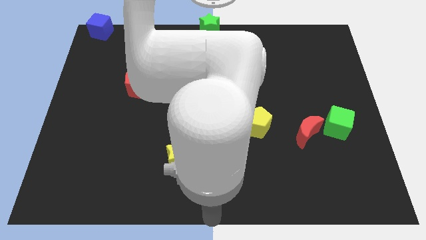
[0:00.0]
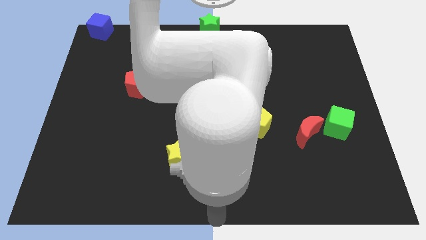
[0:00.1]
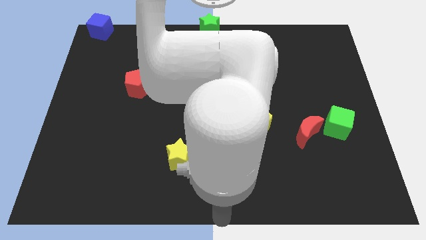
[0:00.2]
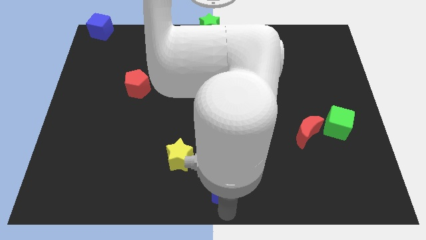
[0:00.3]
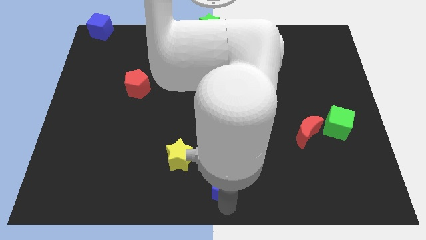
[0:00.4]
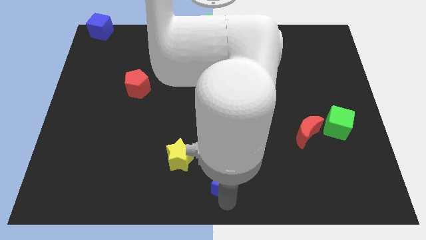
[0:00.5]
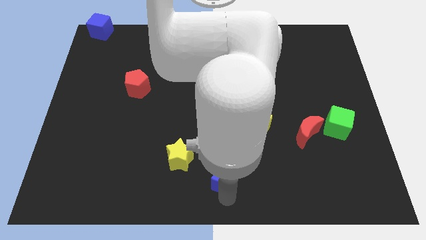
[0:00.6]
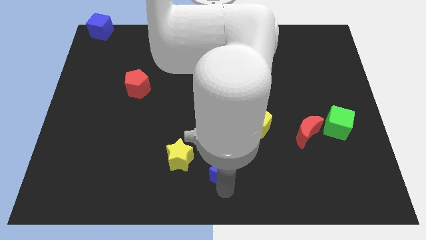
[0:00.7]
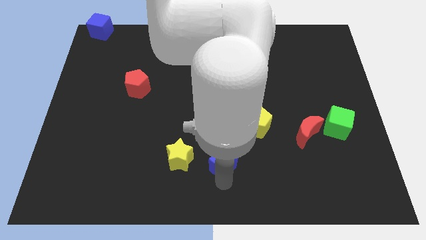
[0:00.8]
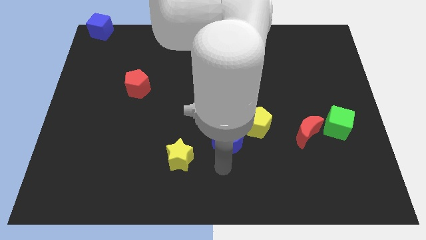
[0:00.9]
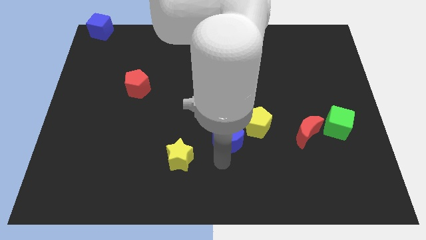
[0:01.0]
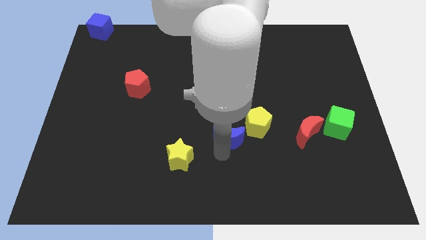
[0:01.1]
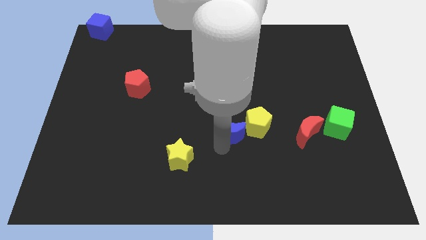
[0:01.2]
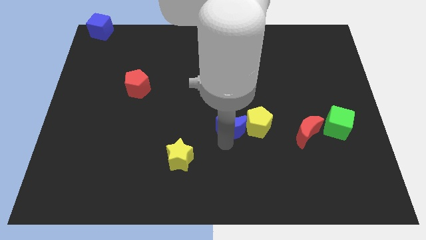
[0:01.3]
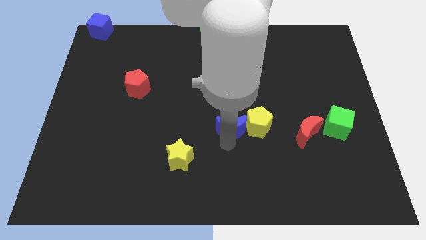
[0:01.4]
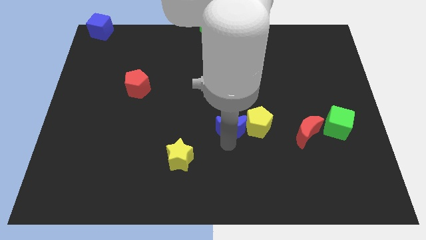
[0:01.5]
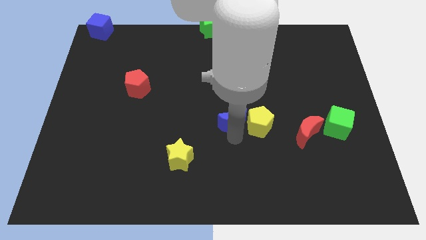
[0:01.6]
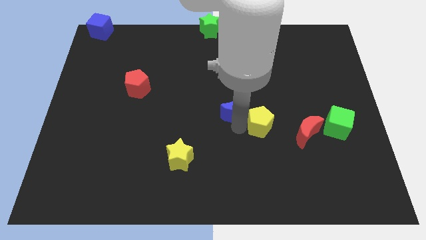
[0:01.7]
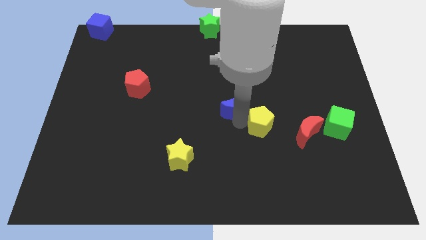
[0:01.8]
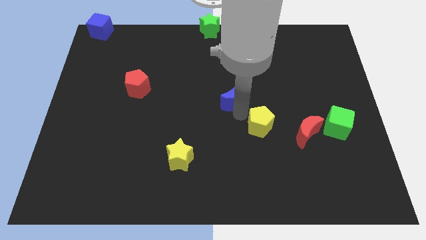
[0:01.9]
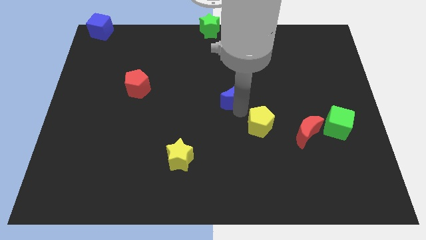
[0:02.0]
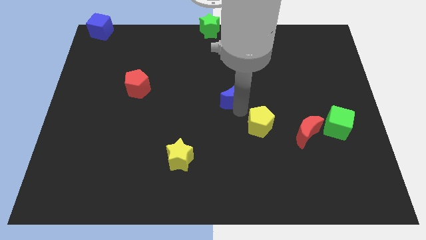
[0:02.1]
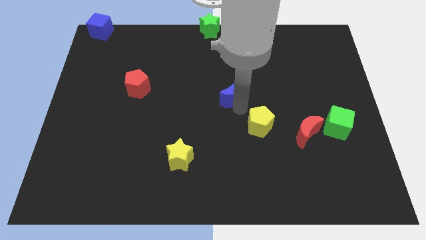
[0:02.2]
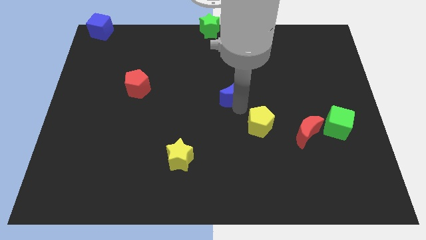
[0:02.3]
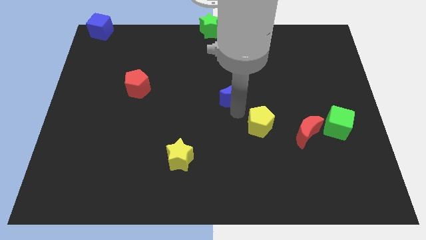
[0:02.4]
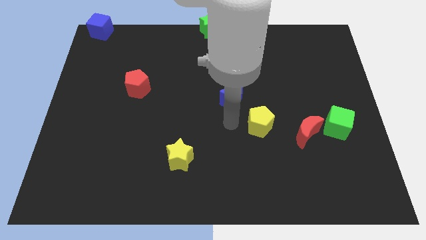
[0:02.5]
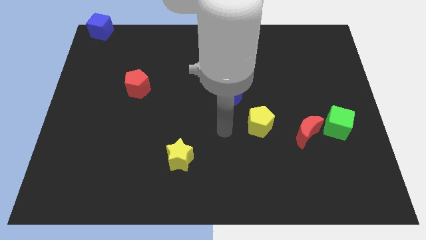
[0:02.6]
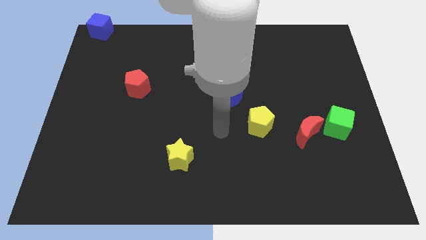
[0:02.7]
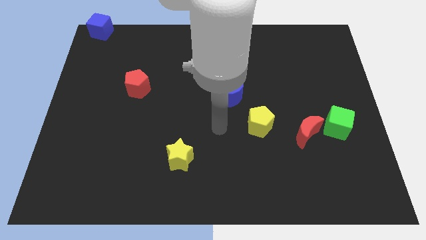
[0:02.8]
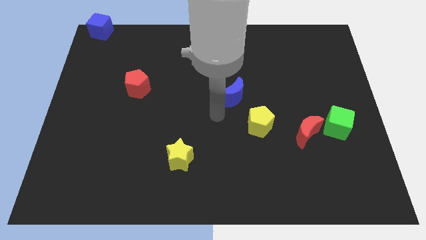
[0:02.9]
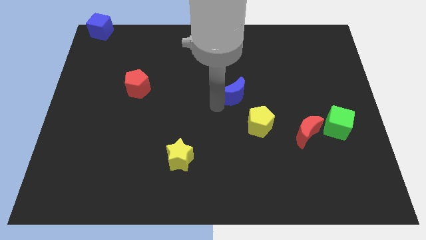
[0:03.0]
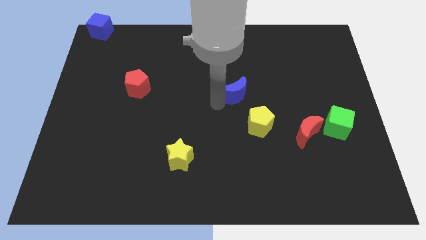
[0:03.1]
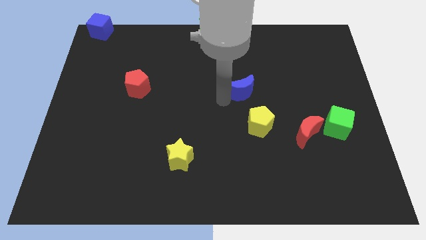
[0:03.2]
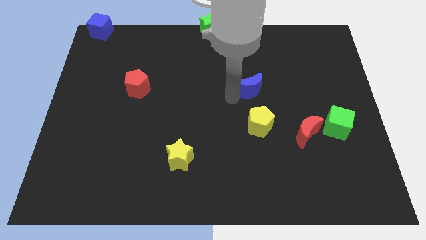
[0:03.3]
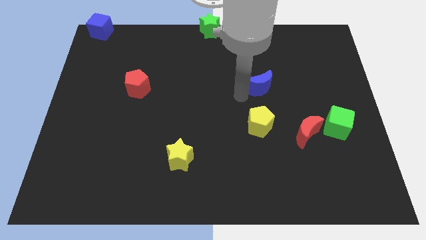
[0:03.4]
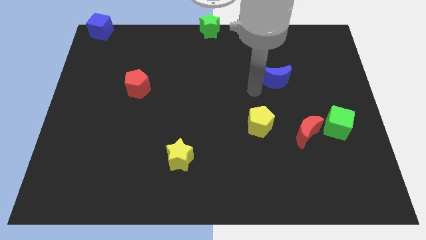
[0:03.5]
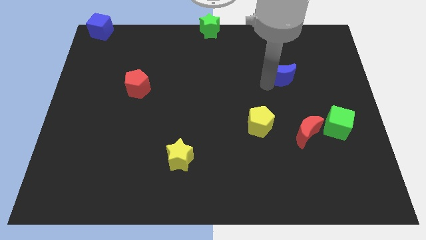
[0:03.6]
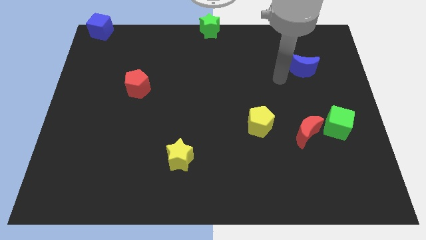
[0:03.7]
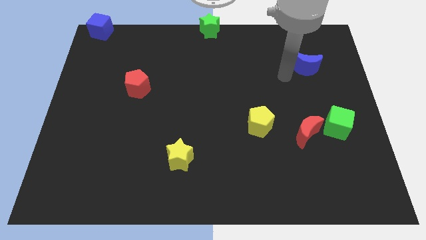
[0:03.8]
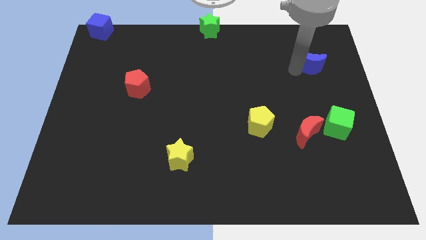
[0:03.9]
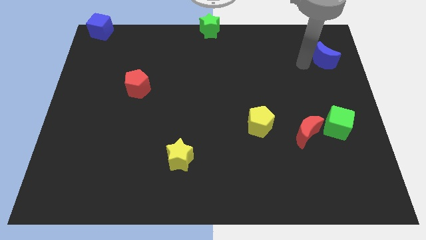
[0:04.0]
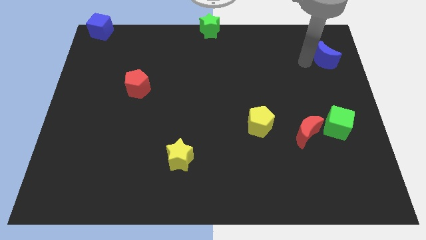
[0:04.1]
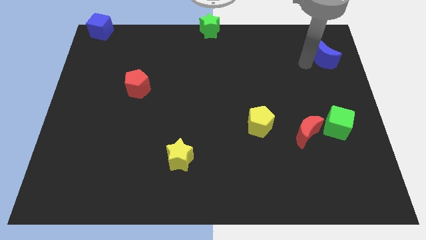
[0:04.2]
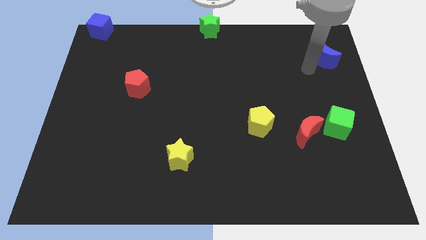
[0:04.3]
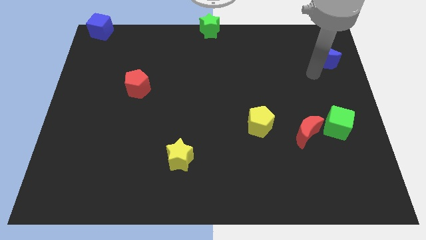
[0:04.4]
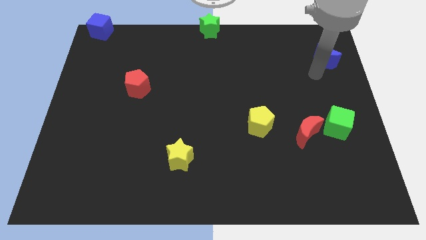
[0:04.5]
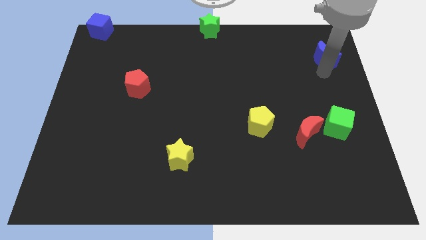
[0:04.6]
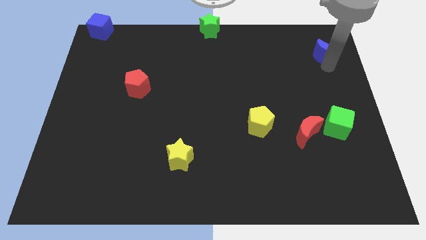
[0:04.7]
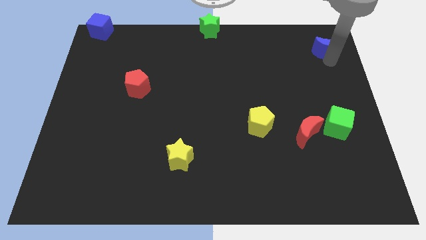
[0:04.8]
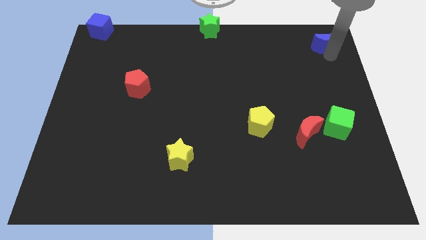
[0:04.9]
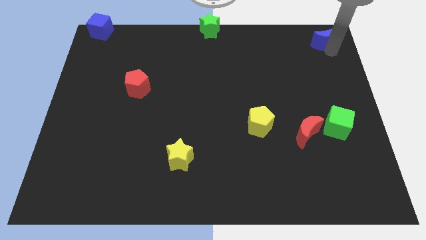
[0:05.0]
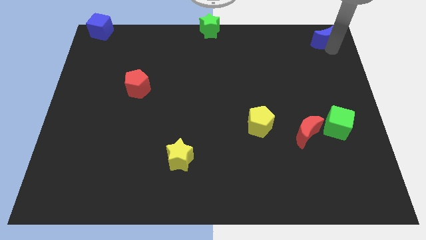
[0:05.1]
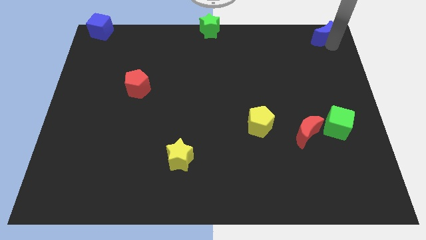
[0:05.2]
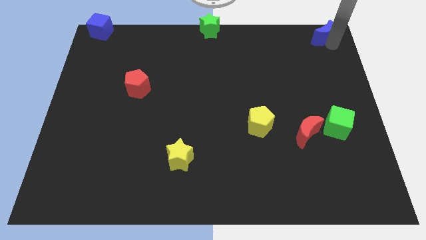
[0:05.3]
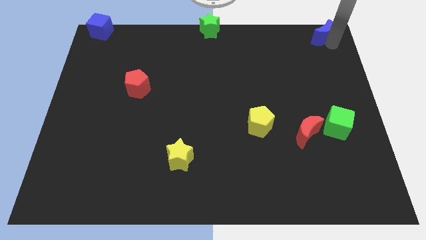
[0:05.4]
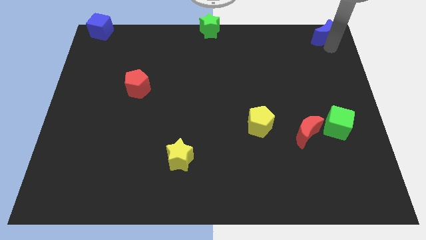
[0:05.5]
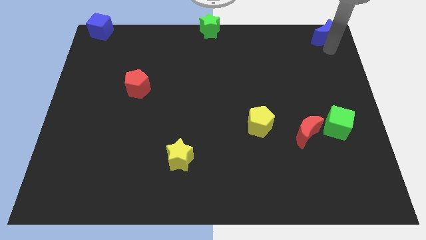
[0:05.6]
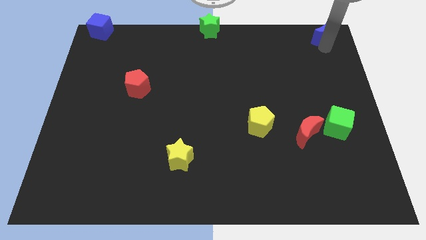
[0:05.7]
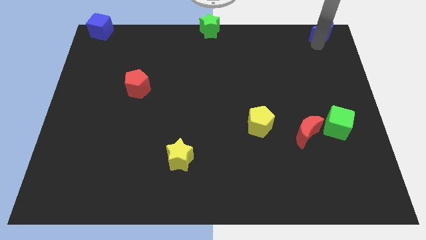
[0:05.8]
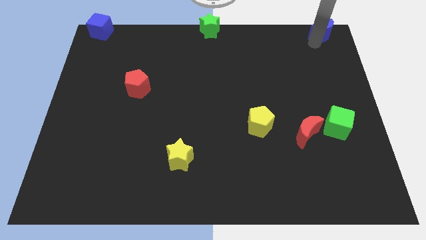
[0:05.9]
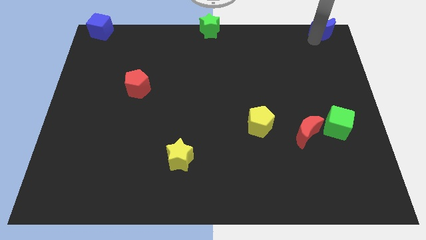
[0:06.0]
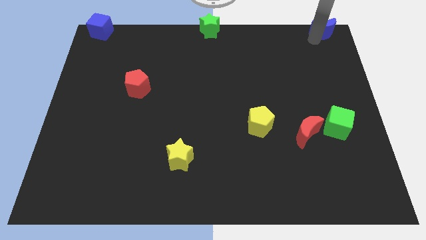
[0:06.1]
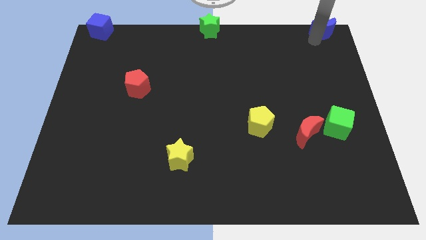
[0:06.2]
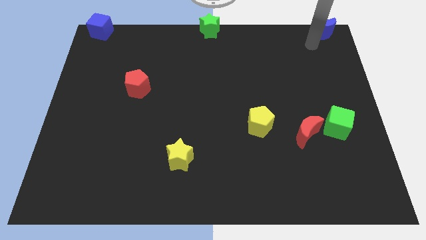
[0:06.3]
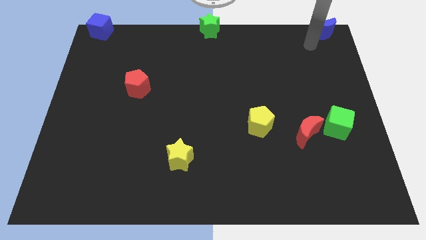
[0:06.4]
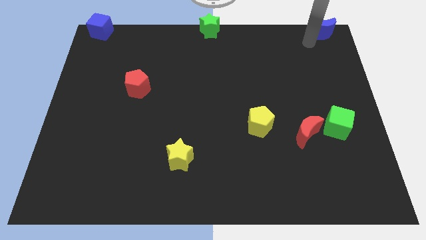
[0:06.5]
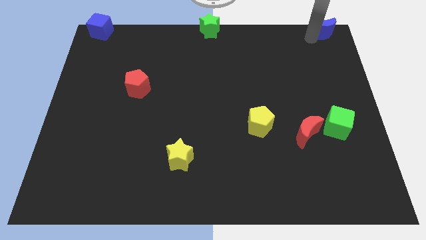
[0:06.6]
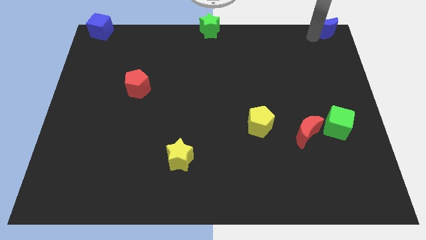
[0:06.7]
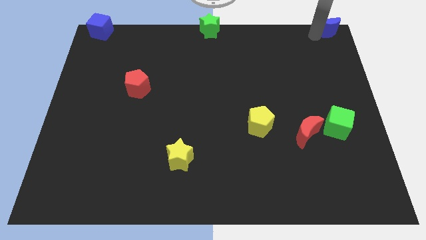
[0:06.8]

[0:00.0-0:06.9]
push the blue moon to the top right corner of the board

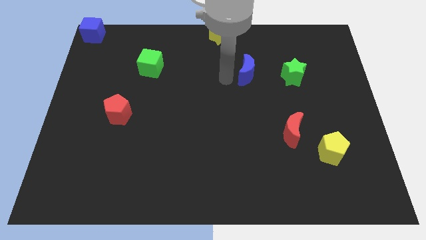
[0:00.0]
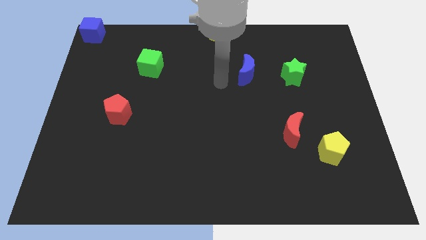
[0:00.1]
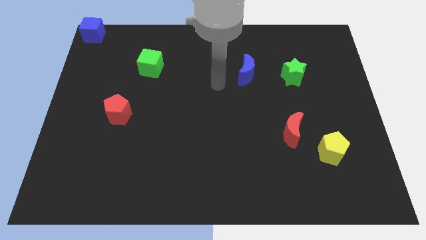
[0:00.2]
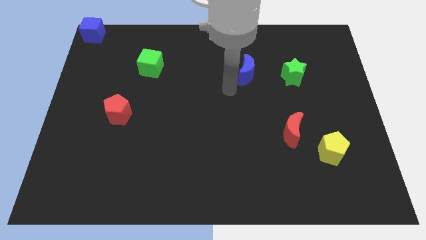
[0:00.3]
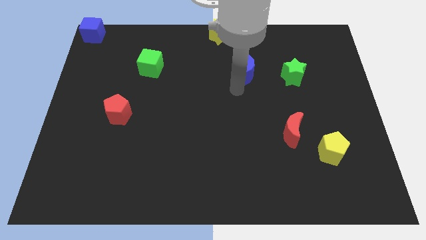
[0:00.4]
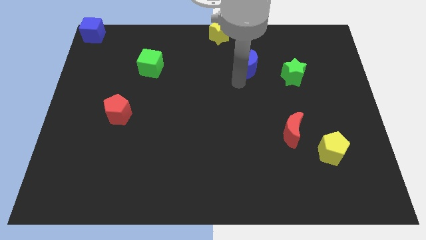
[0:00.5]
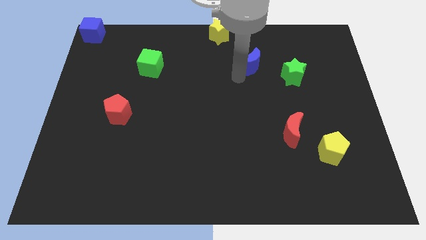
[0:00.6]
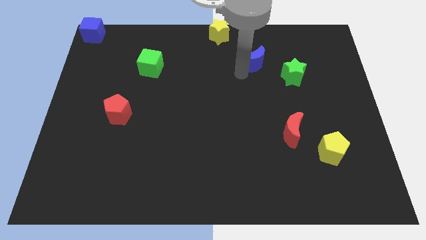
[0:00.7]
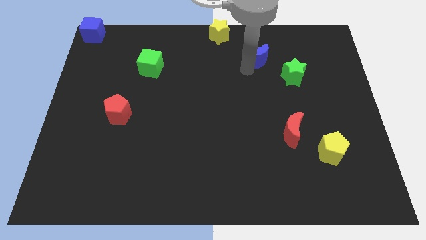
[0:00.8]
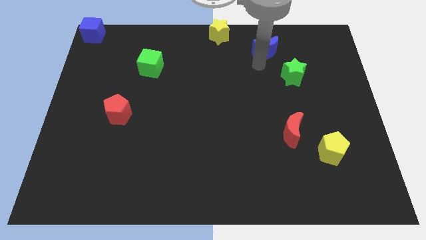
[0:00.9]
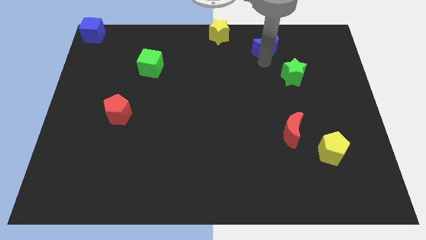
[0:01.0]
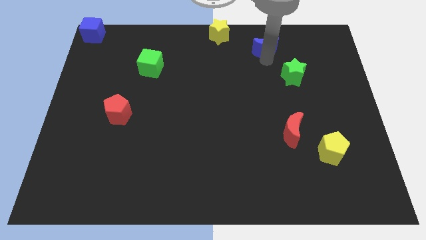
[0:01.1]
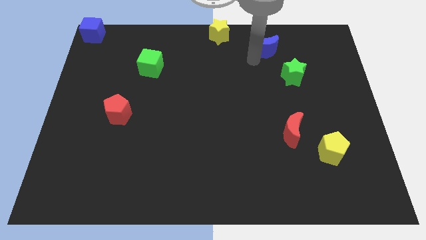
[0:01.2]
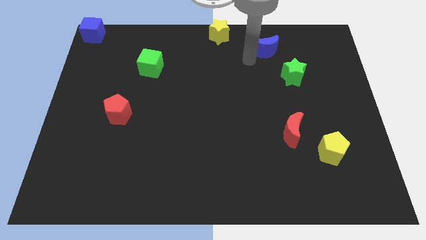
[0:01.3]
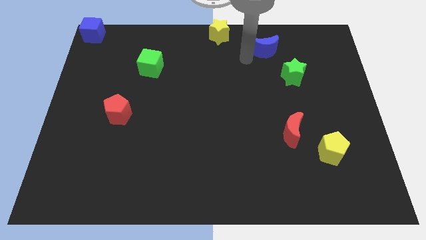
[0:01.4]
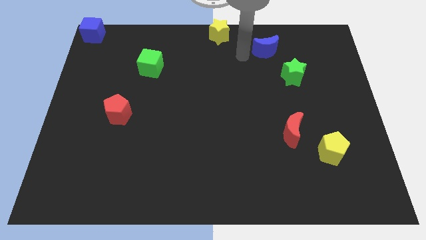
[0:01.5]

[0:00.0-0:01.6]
push the blue crescent slightly to the top

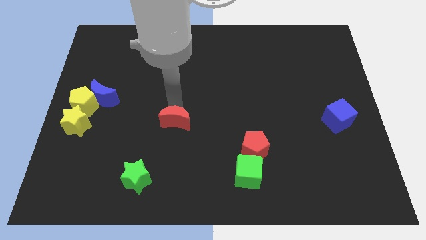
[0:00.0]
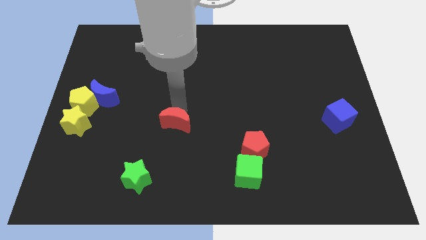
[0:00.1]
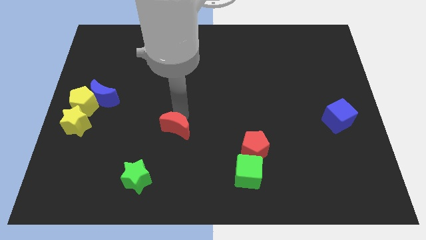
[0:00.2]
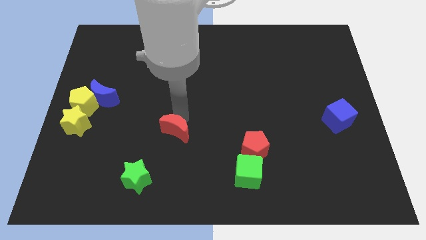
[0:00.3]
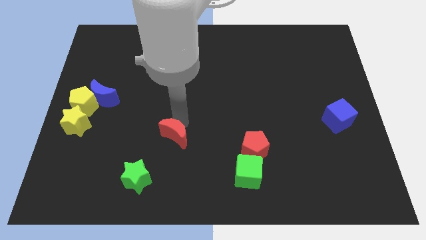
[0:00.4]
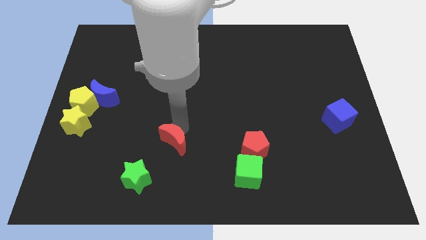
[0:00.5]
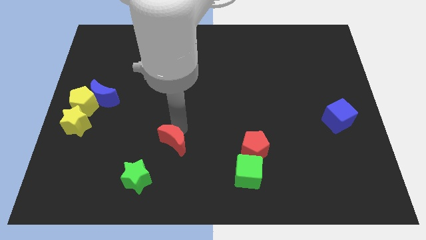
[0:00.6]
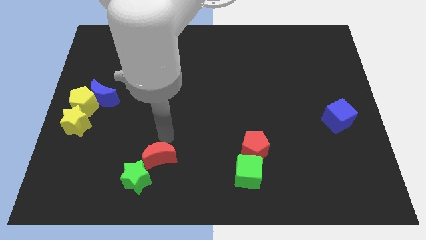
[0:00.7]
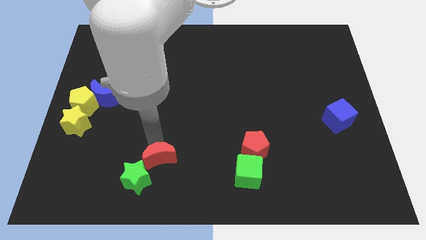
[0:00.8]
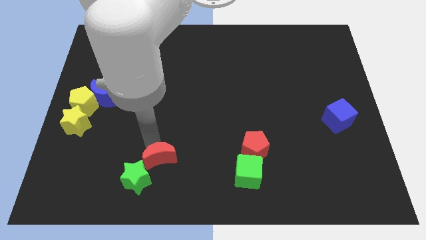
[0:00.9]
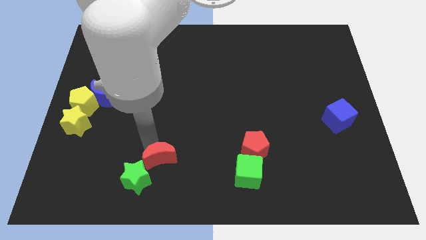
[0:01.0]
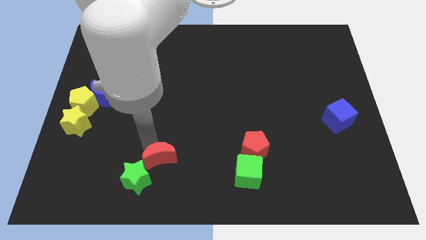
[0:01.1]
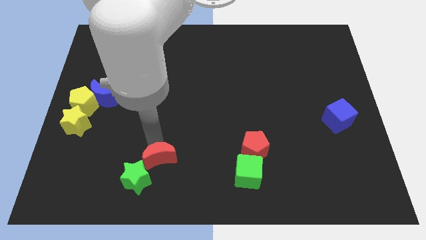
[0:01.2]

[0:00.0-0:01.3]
move the red crescent into the top side of the green star
